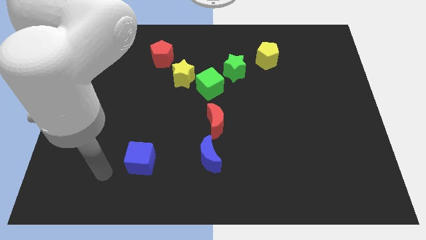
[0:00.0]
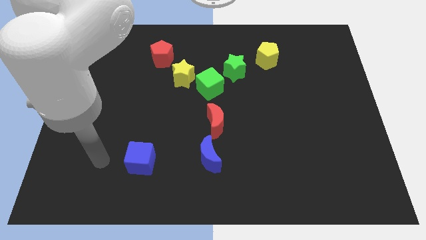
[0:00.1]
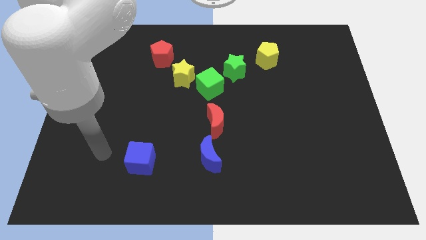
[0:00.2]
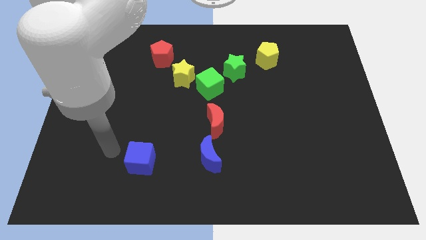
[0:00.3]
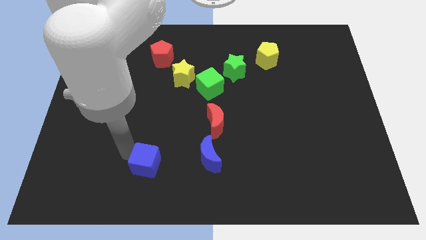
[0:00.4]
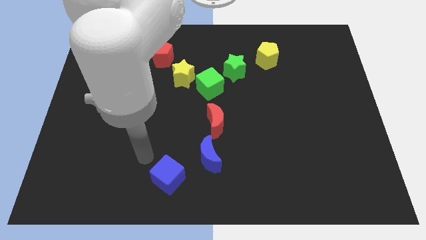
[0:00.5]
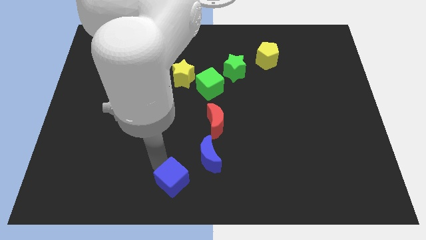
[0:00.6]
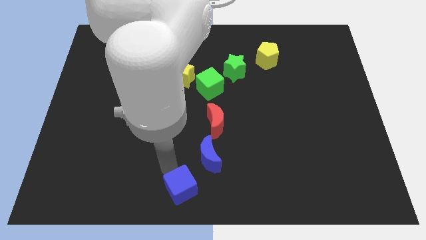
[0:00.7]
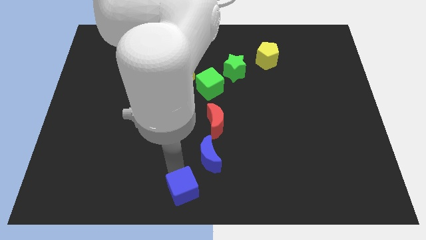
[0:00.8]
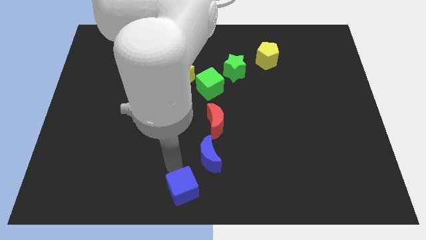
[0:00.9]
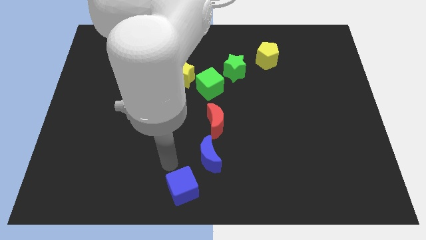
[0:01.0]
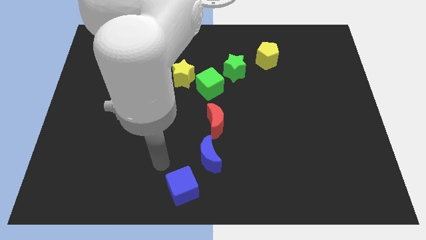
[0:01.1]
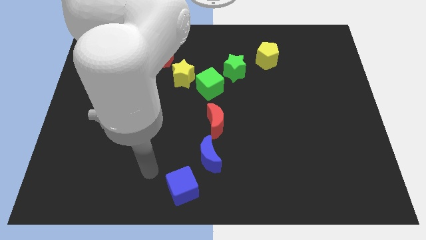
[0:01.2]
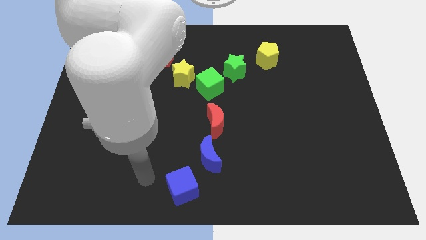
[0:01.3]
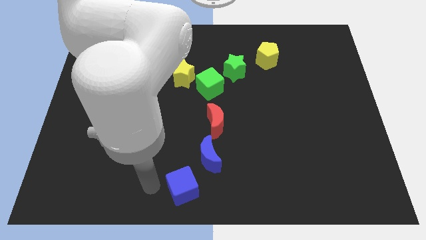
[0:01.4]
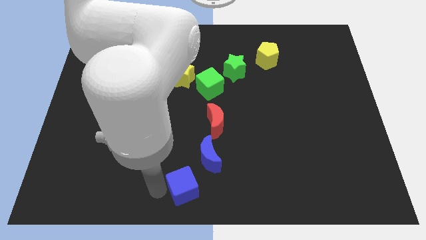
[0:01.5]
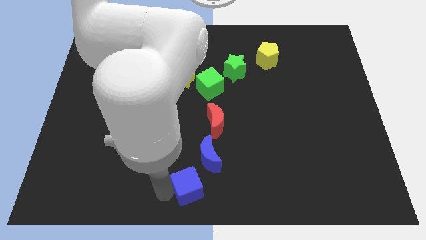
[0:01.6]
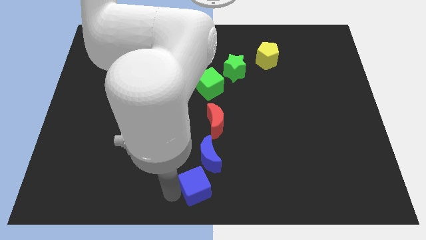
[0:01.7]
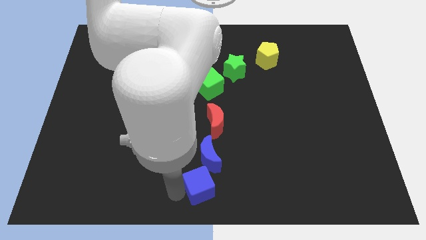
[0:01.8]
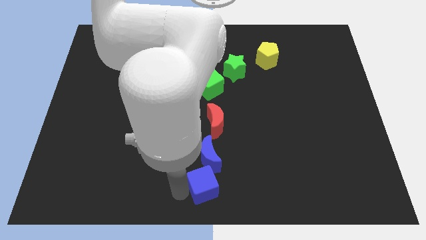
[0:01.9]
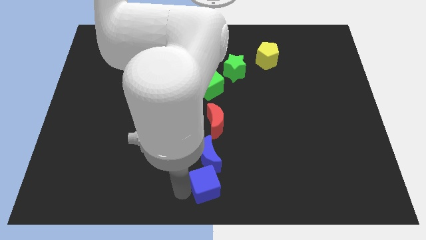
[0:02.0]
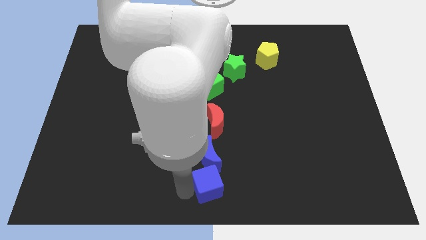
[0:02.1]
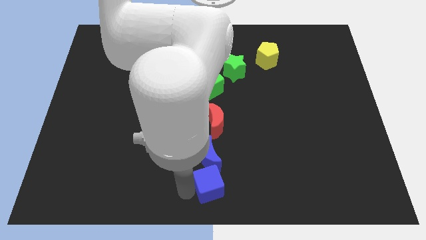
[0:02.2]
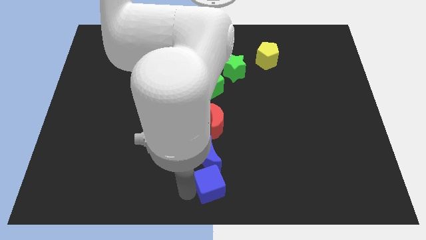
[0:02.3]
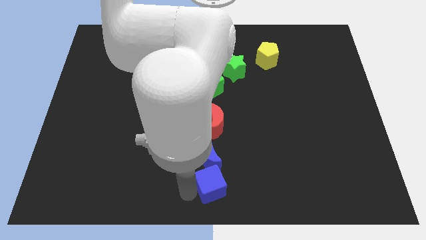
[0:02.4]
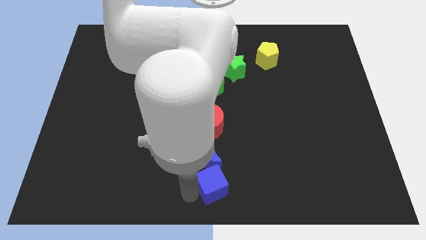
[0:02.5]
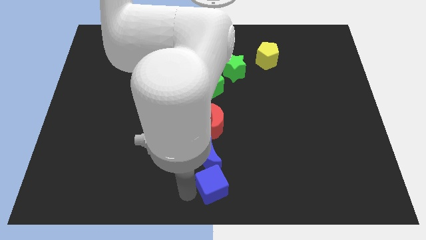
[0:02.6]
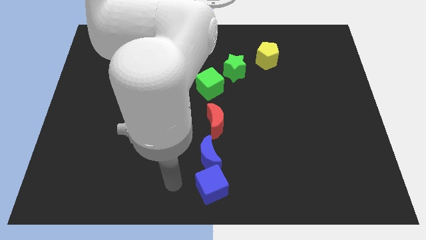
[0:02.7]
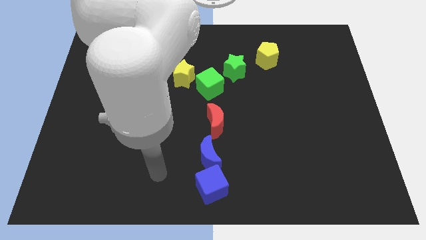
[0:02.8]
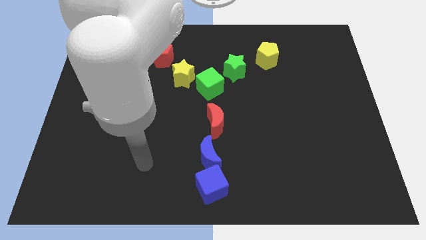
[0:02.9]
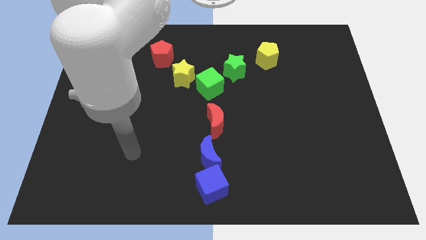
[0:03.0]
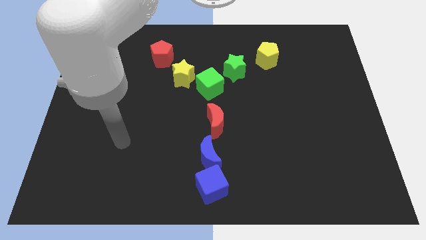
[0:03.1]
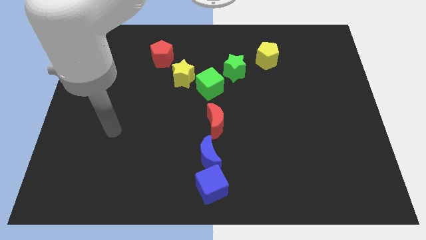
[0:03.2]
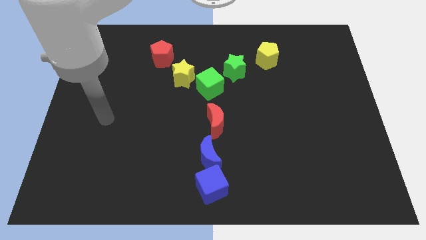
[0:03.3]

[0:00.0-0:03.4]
push the blue cube to the bottom center of the board

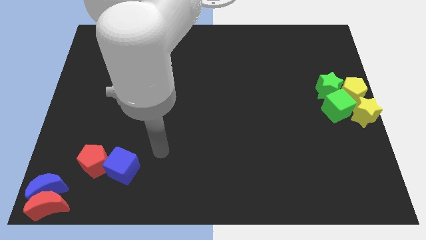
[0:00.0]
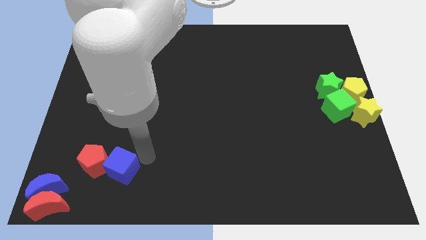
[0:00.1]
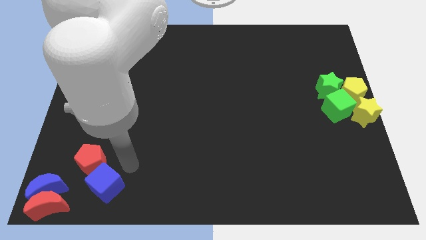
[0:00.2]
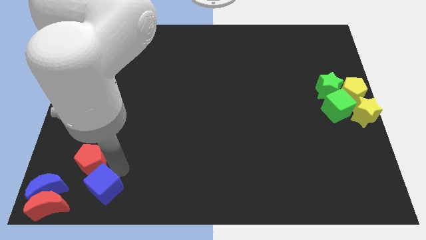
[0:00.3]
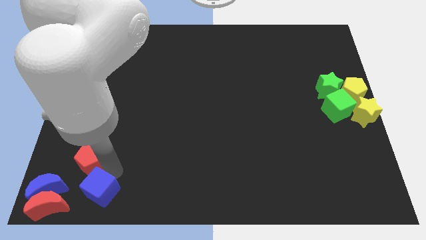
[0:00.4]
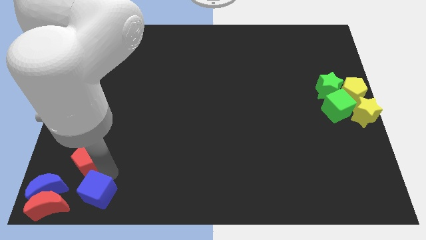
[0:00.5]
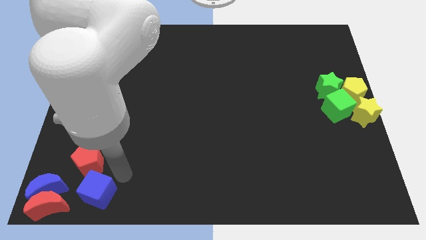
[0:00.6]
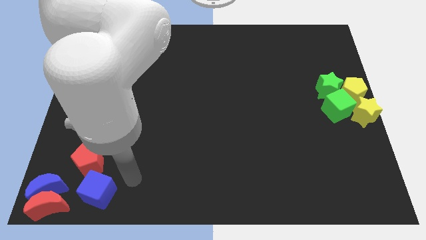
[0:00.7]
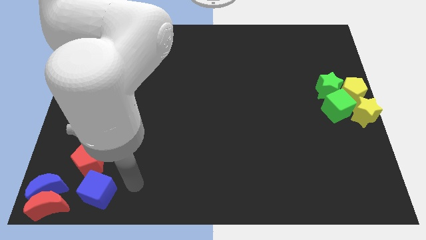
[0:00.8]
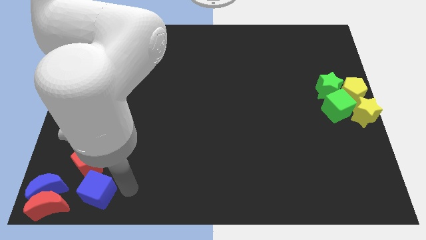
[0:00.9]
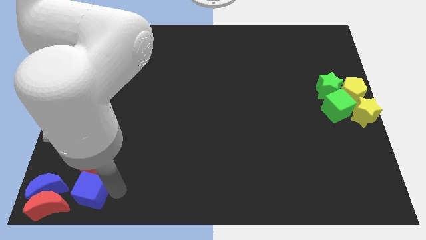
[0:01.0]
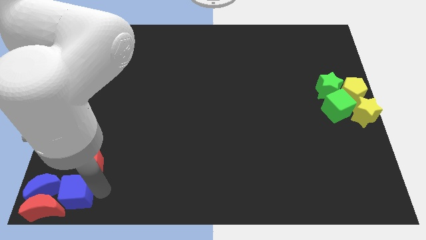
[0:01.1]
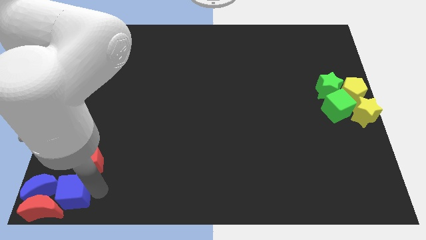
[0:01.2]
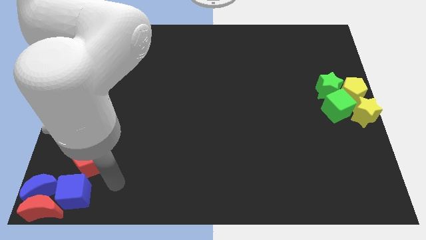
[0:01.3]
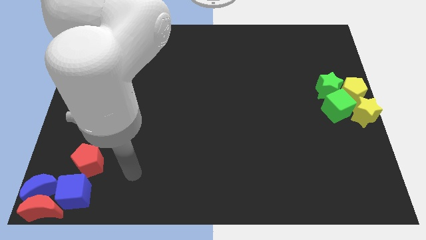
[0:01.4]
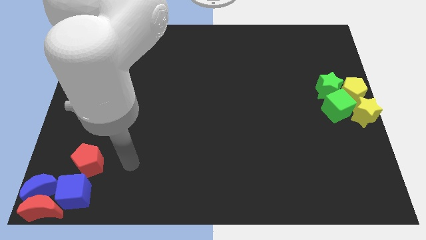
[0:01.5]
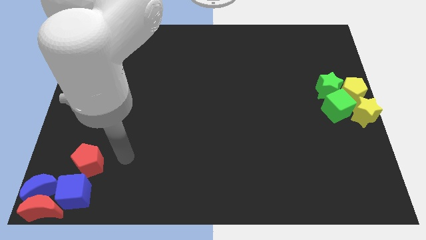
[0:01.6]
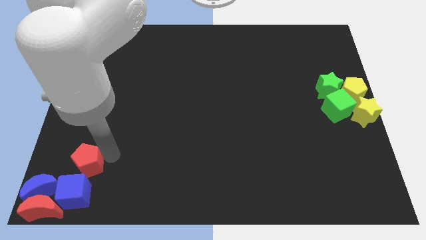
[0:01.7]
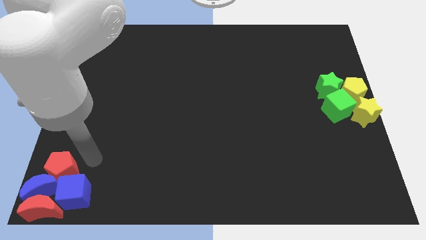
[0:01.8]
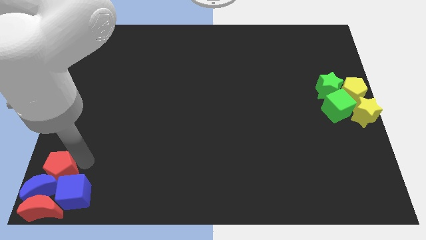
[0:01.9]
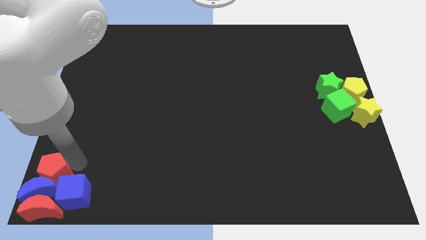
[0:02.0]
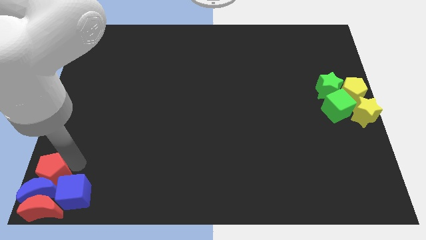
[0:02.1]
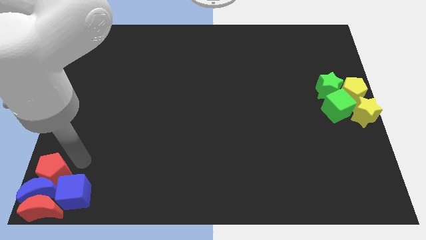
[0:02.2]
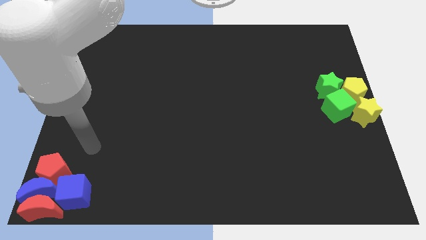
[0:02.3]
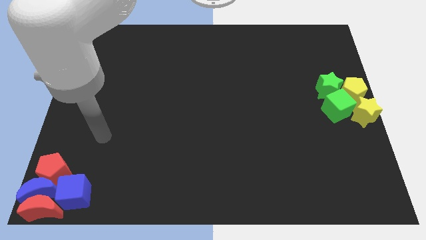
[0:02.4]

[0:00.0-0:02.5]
push the blue cube with red pentagon close to the blue and red crescents

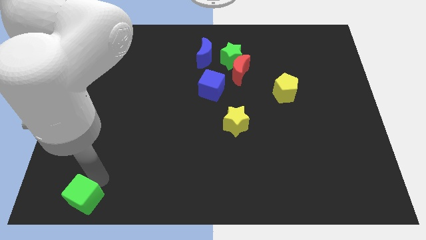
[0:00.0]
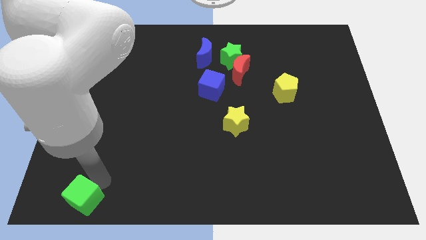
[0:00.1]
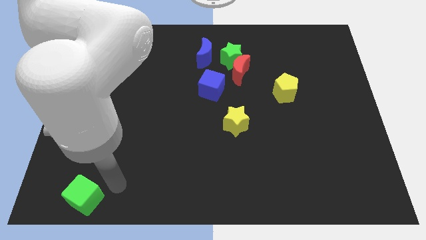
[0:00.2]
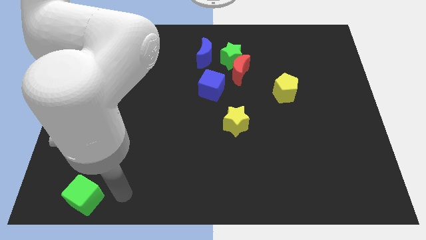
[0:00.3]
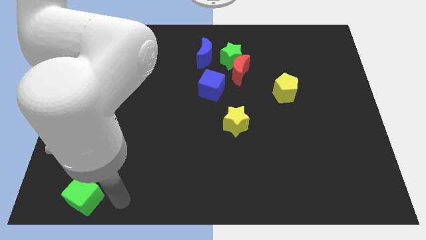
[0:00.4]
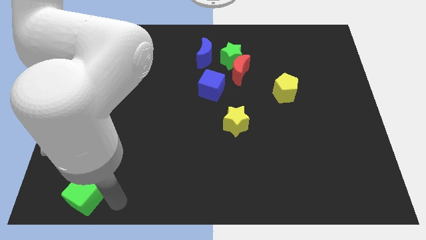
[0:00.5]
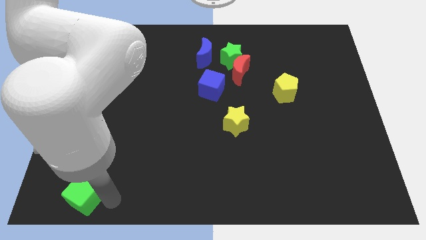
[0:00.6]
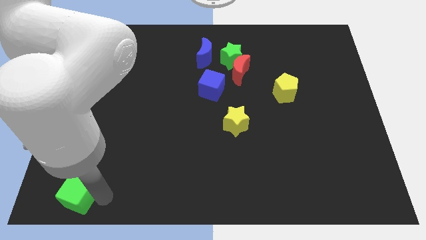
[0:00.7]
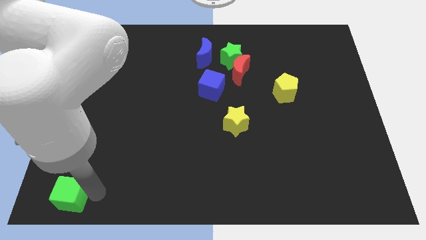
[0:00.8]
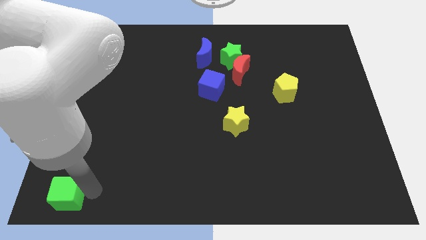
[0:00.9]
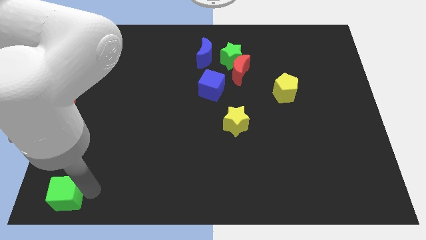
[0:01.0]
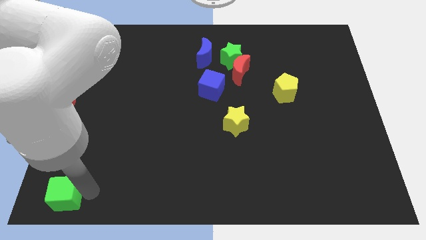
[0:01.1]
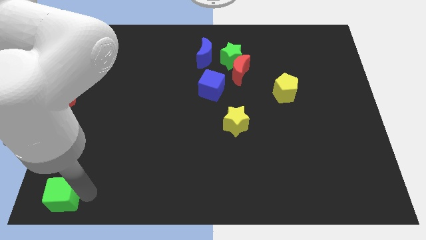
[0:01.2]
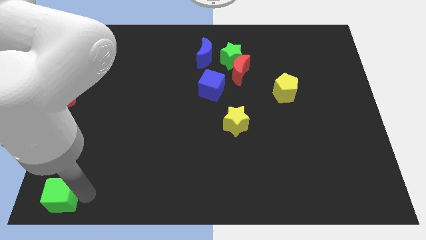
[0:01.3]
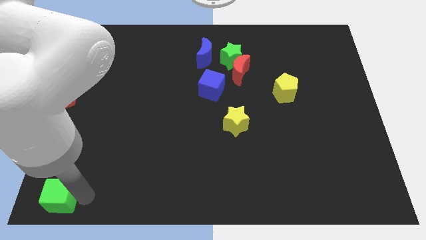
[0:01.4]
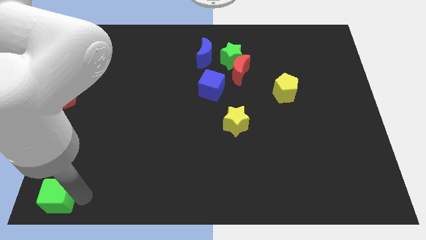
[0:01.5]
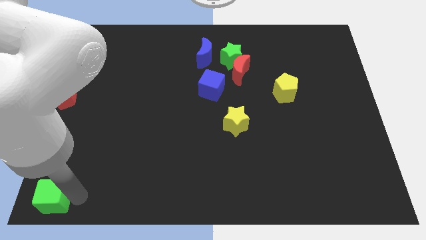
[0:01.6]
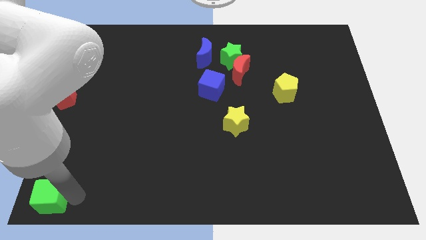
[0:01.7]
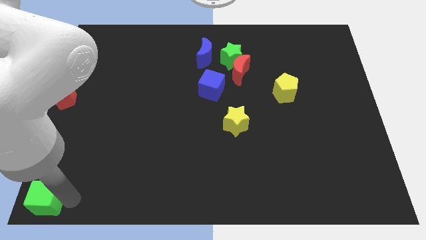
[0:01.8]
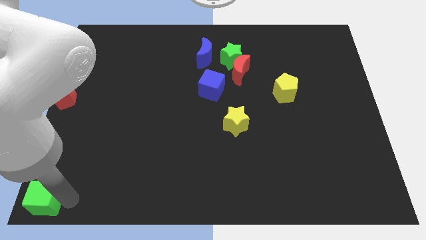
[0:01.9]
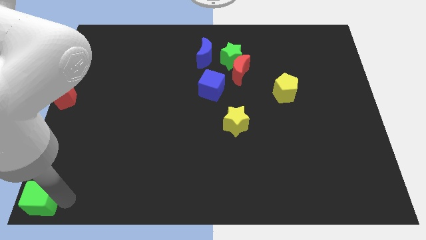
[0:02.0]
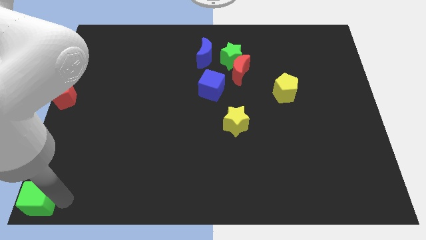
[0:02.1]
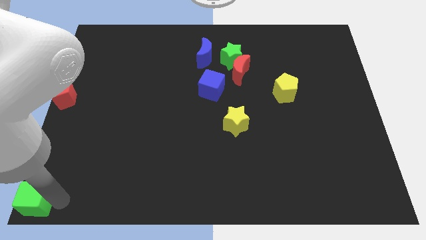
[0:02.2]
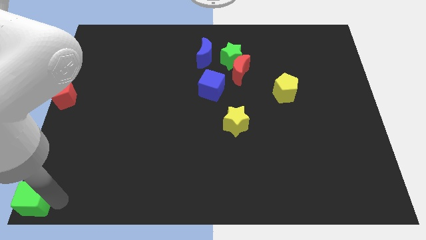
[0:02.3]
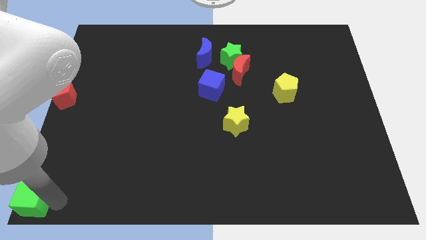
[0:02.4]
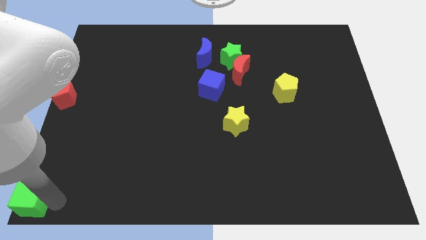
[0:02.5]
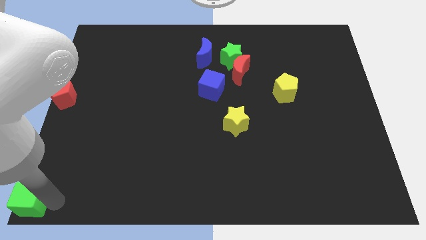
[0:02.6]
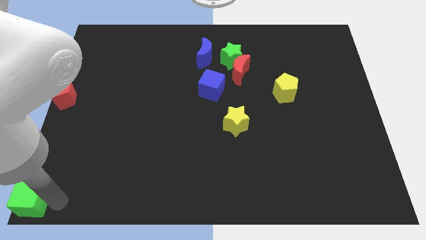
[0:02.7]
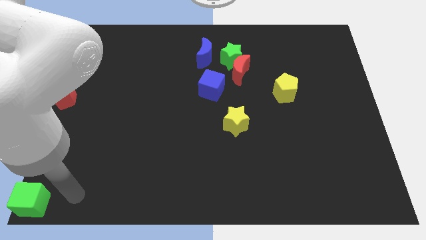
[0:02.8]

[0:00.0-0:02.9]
move the green cube to the bottom left

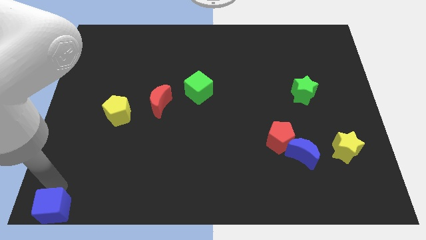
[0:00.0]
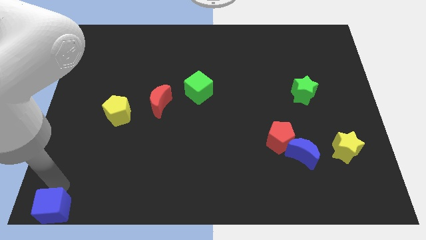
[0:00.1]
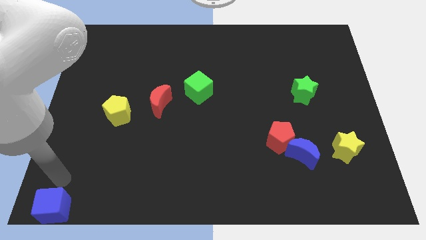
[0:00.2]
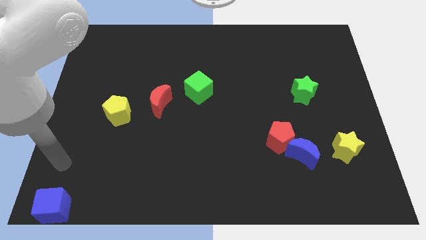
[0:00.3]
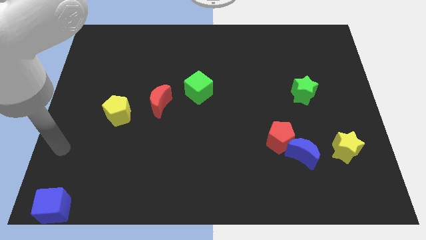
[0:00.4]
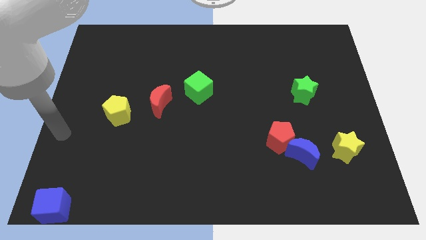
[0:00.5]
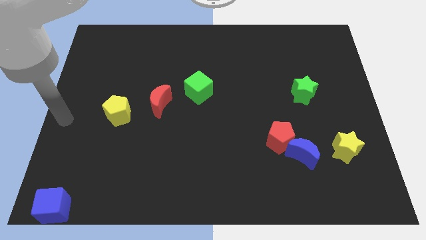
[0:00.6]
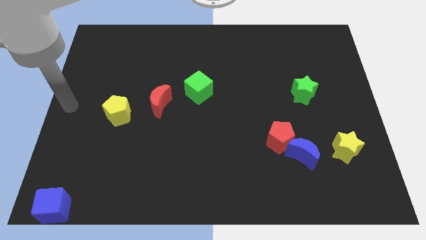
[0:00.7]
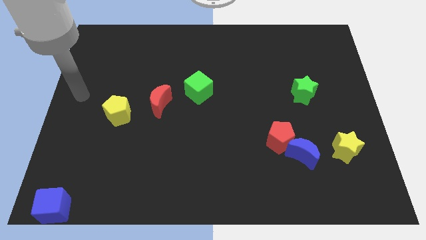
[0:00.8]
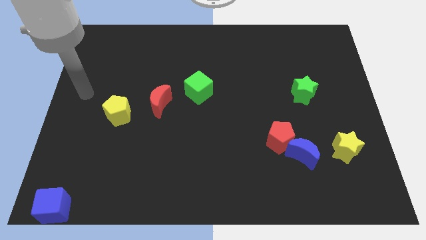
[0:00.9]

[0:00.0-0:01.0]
move the arm away from the blue cube
